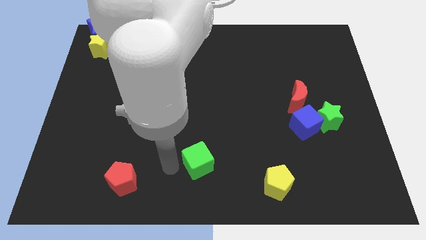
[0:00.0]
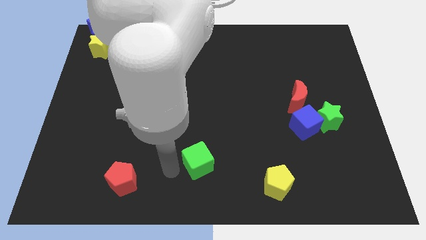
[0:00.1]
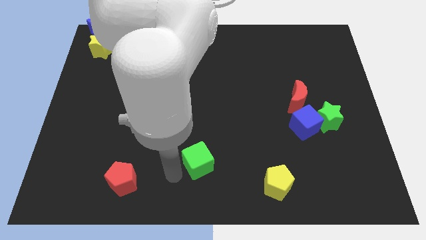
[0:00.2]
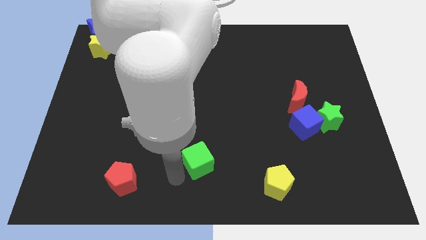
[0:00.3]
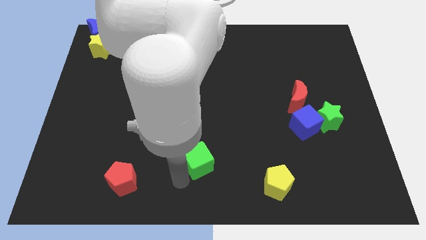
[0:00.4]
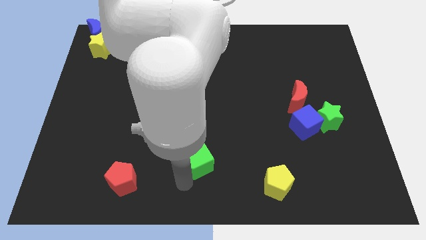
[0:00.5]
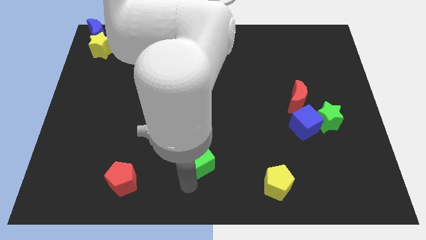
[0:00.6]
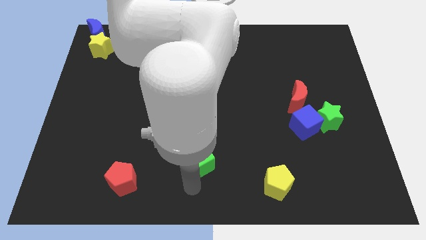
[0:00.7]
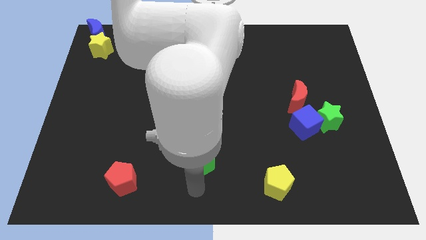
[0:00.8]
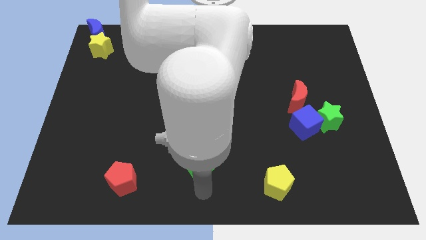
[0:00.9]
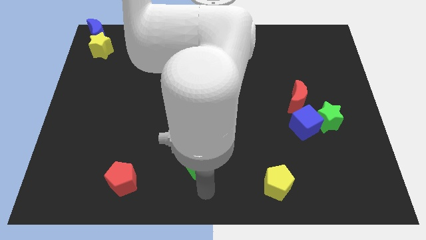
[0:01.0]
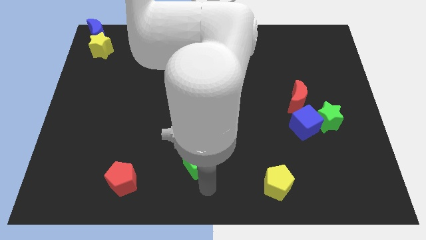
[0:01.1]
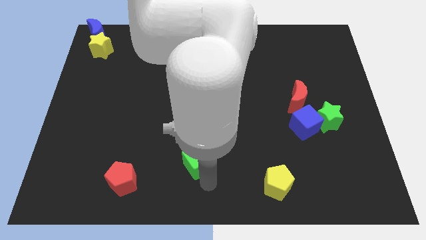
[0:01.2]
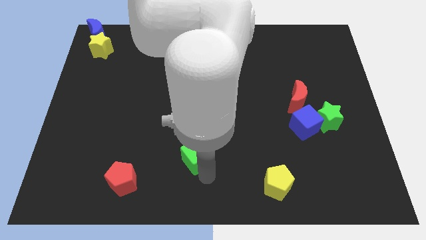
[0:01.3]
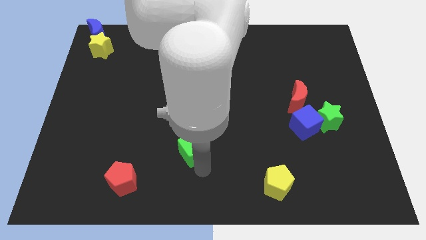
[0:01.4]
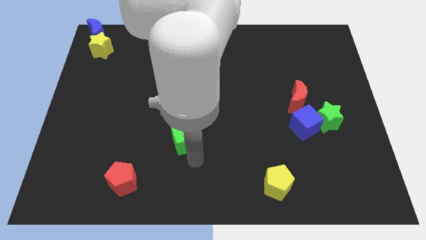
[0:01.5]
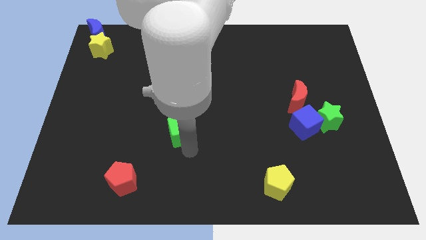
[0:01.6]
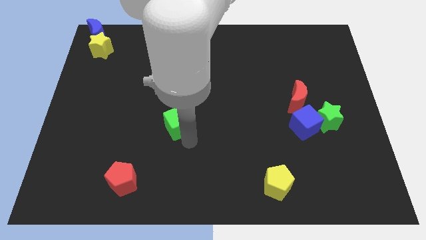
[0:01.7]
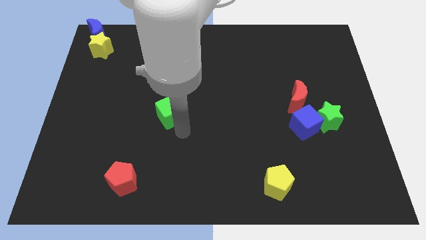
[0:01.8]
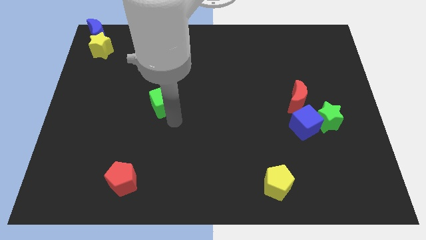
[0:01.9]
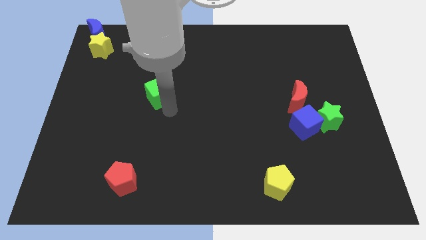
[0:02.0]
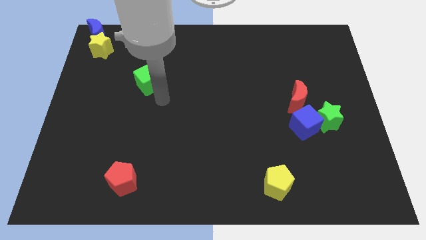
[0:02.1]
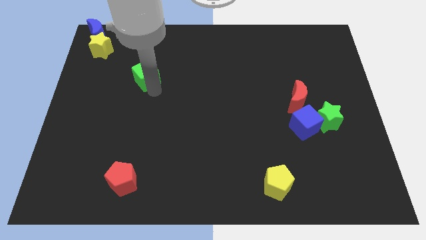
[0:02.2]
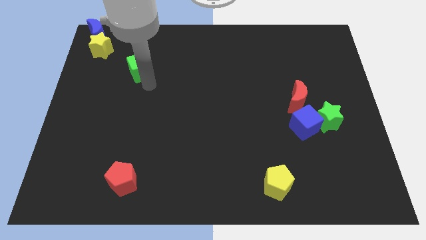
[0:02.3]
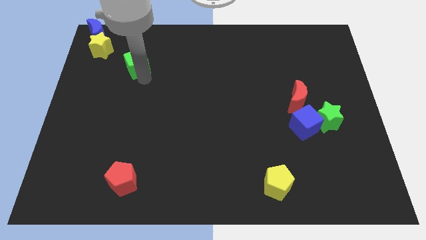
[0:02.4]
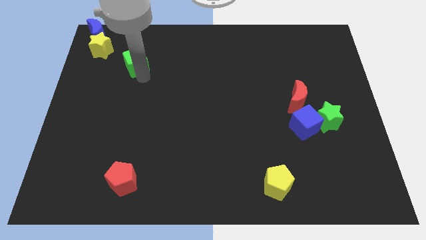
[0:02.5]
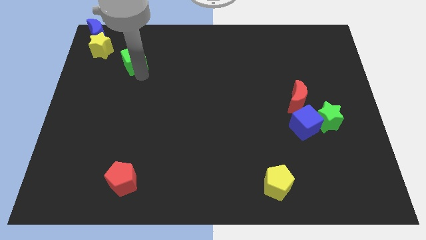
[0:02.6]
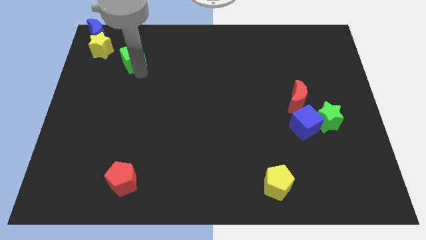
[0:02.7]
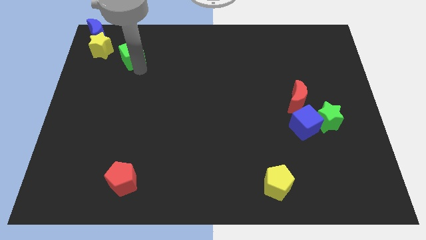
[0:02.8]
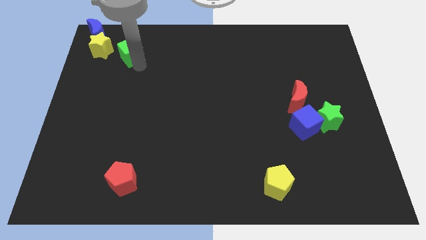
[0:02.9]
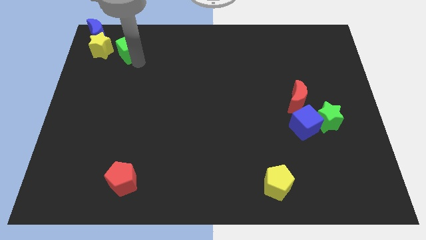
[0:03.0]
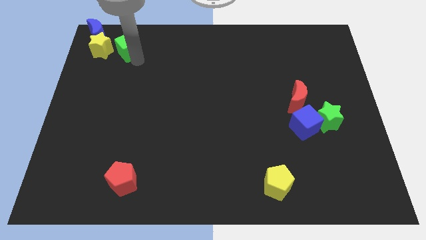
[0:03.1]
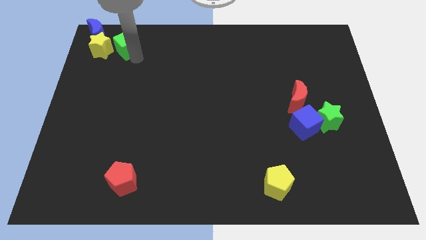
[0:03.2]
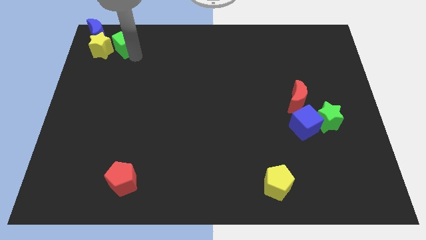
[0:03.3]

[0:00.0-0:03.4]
move the green cube right to the yellow star

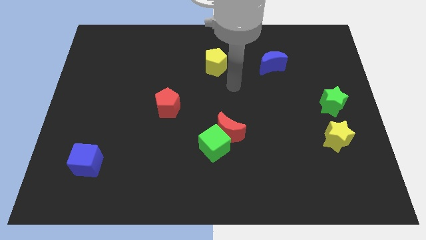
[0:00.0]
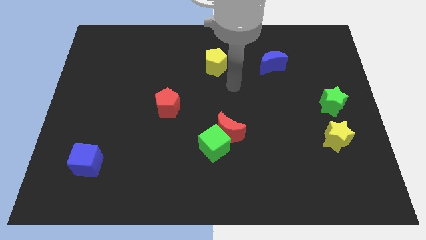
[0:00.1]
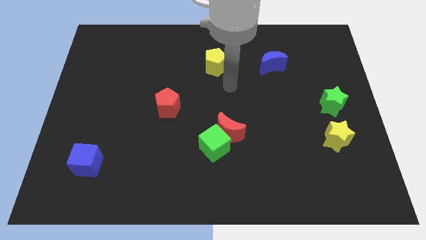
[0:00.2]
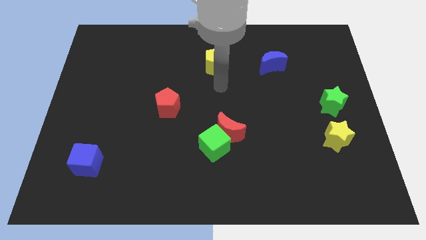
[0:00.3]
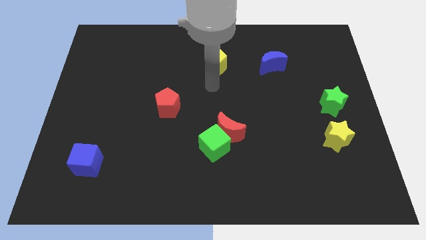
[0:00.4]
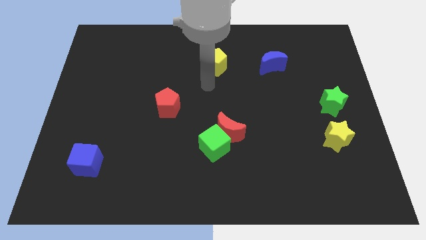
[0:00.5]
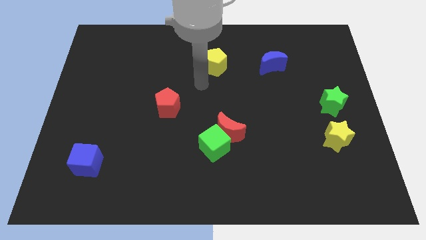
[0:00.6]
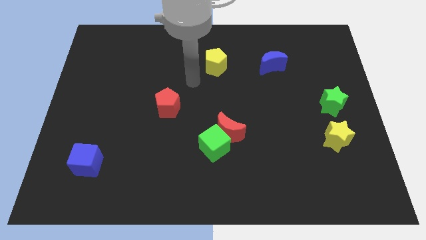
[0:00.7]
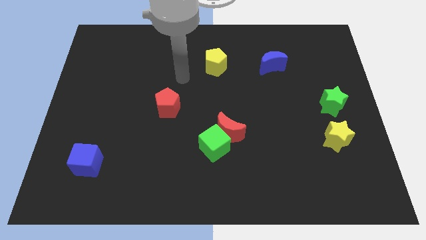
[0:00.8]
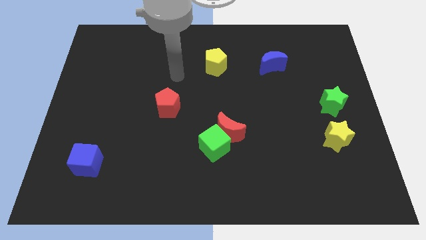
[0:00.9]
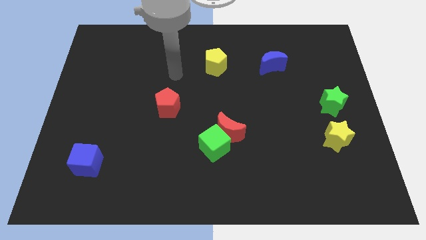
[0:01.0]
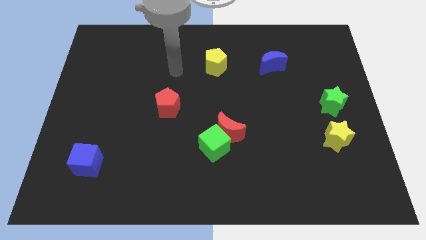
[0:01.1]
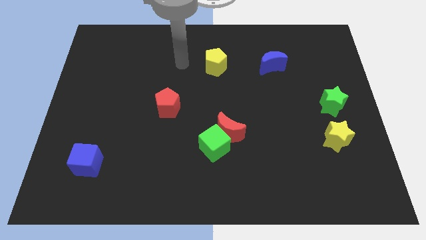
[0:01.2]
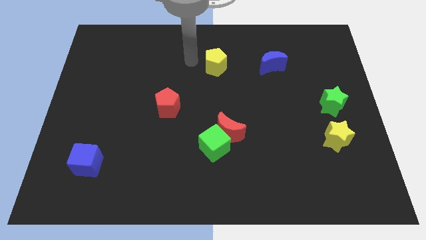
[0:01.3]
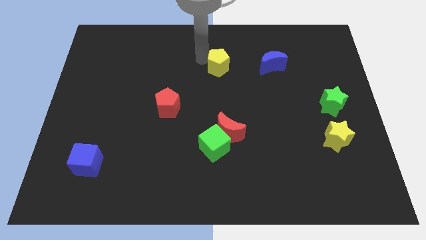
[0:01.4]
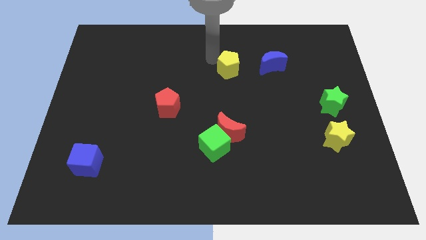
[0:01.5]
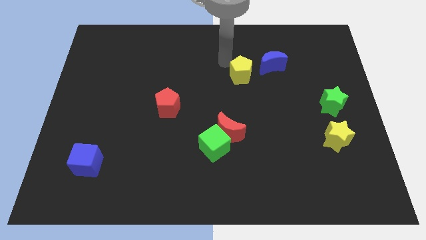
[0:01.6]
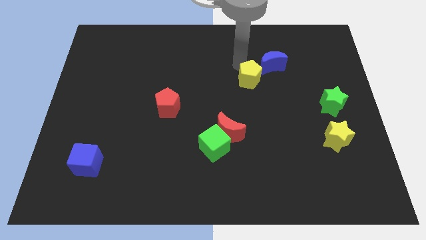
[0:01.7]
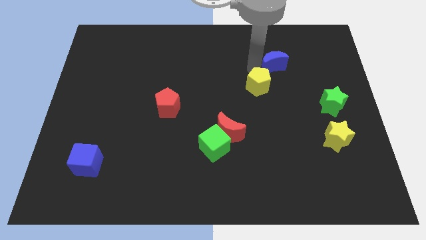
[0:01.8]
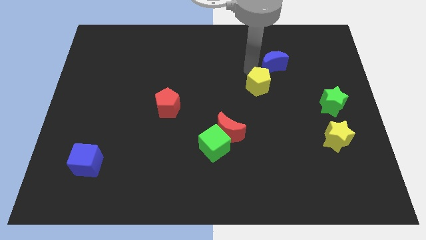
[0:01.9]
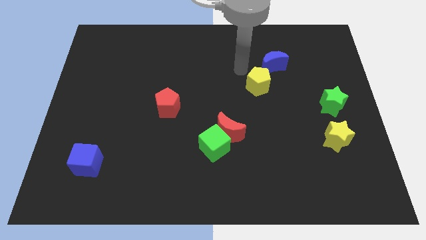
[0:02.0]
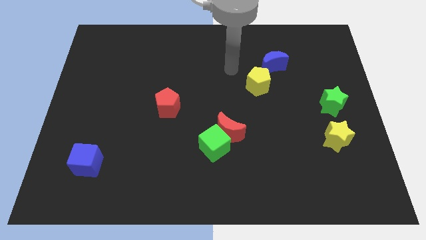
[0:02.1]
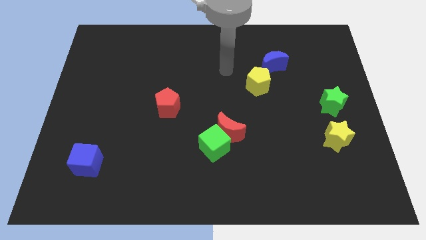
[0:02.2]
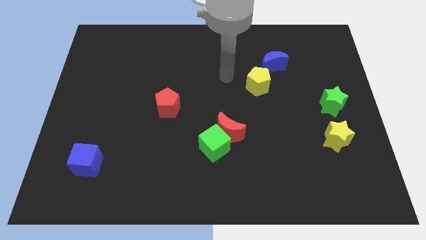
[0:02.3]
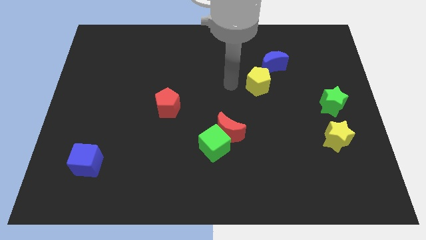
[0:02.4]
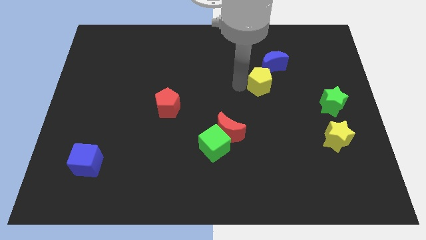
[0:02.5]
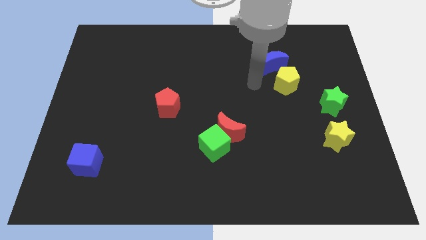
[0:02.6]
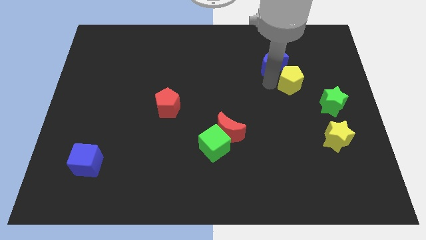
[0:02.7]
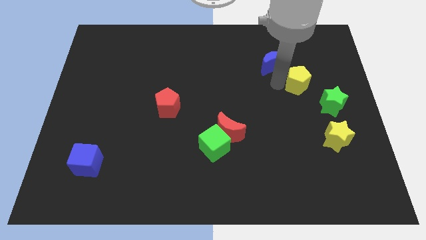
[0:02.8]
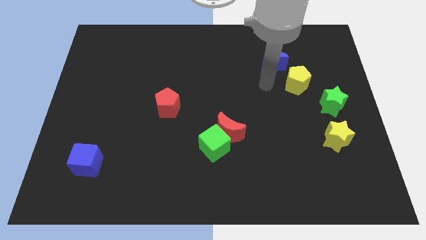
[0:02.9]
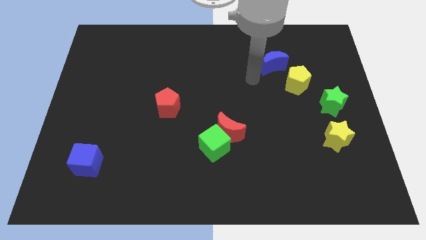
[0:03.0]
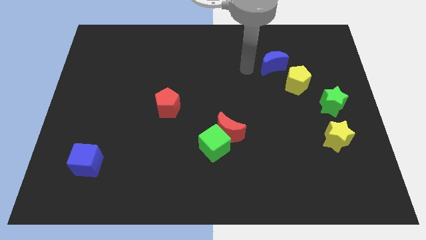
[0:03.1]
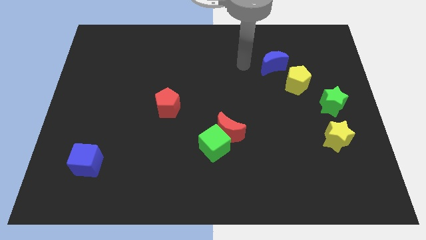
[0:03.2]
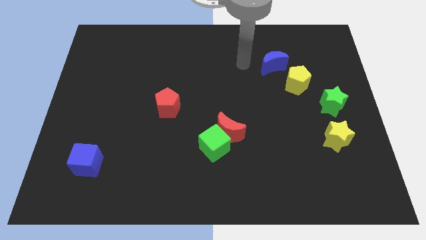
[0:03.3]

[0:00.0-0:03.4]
place the yellow pentagon below the blue moon

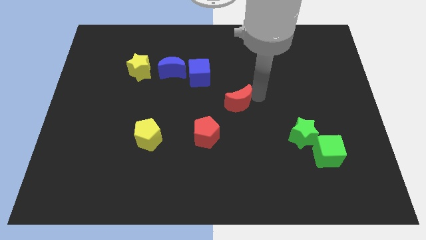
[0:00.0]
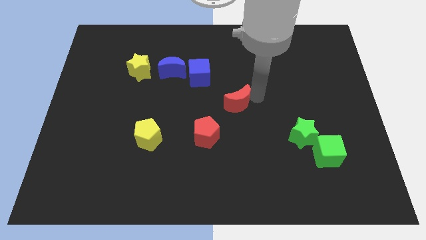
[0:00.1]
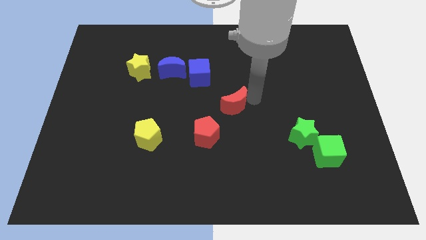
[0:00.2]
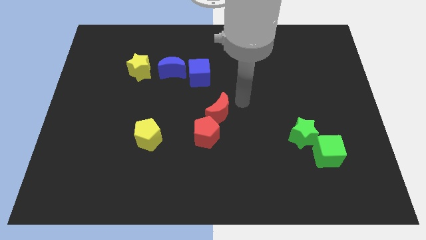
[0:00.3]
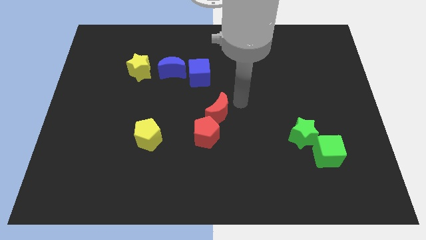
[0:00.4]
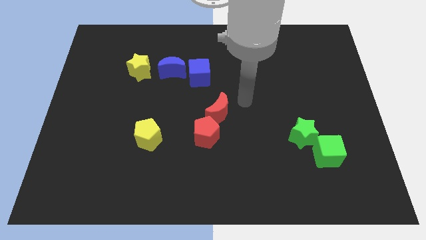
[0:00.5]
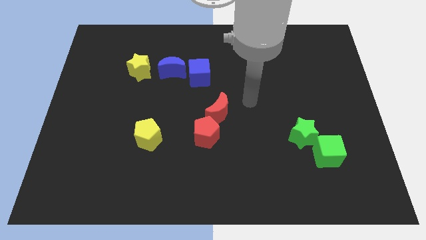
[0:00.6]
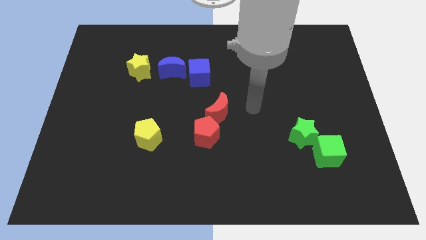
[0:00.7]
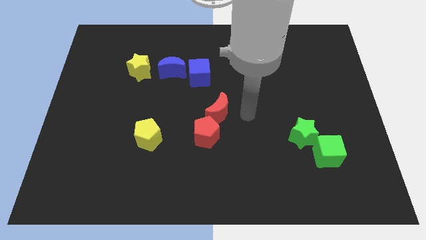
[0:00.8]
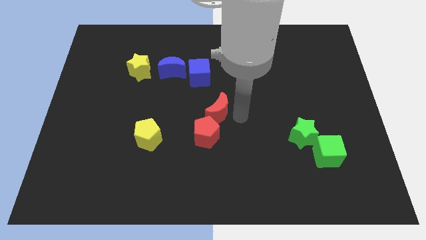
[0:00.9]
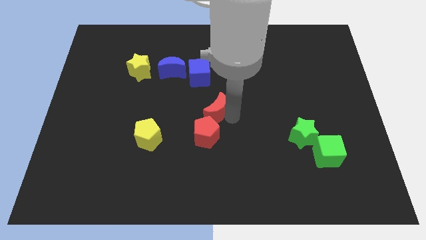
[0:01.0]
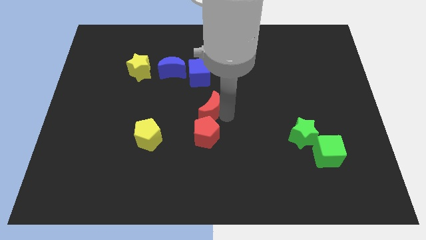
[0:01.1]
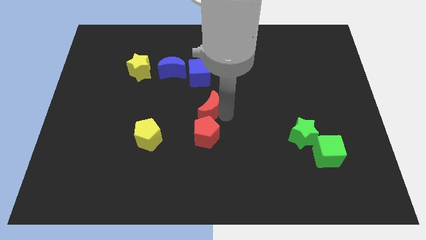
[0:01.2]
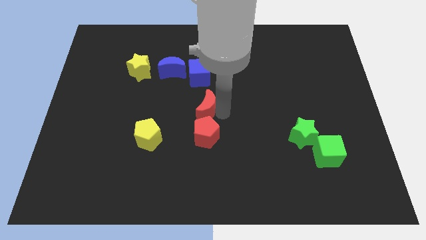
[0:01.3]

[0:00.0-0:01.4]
place the red crescent above the red pentagon

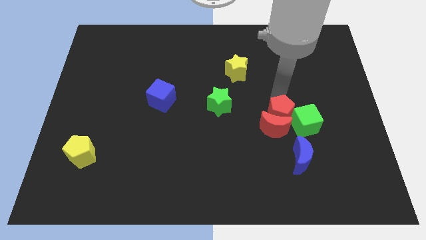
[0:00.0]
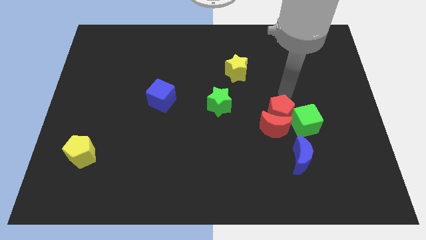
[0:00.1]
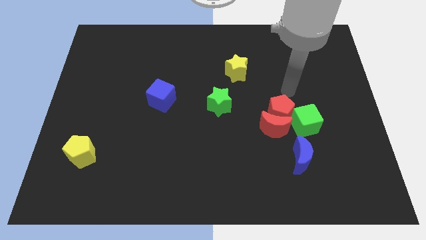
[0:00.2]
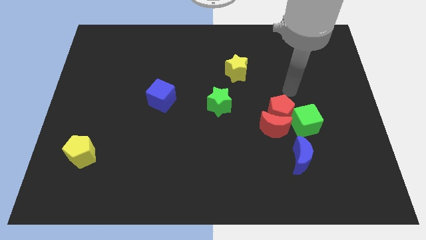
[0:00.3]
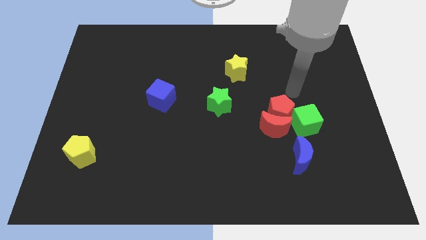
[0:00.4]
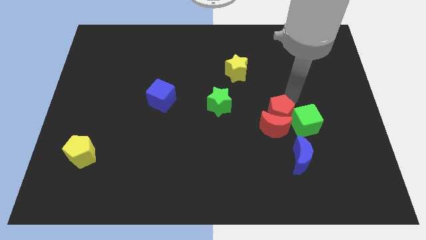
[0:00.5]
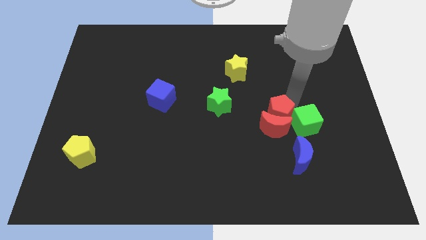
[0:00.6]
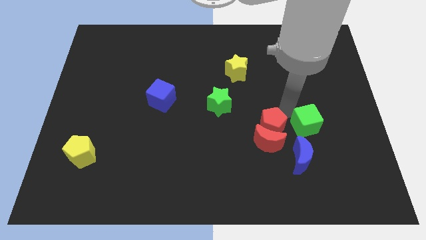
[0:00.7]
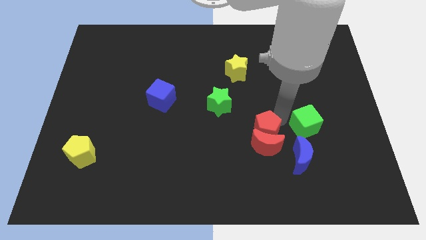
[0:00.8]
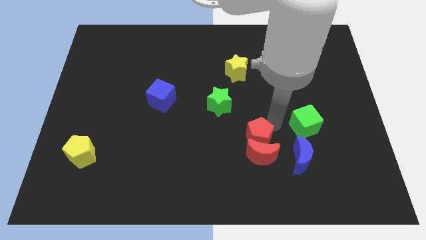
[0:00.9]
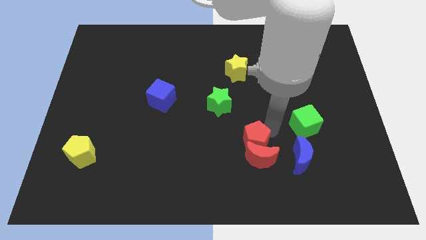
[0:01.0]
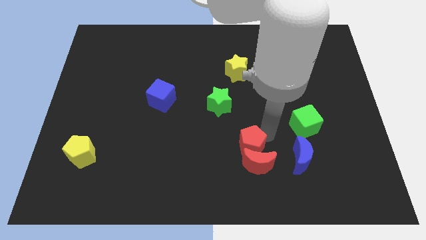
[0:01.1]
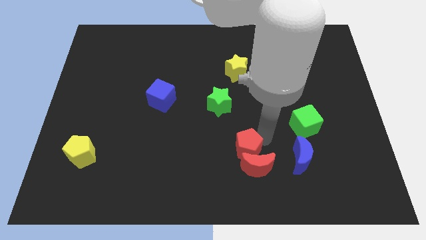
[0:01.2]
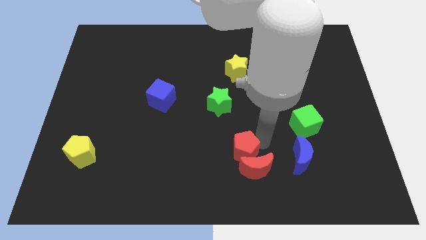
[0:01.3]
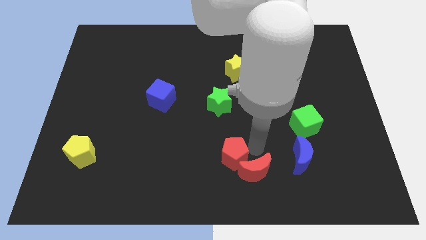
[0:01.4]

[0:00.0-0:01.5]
push the red blocks horizontally to the left of the blue moon
